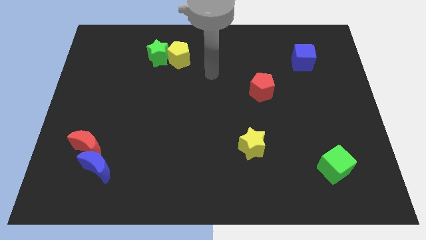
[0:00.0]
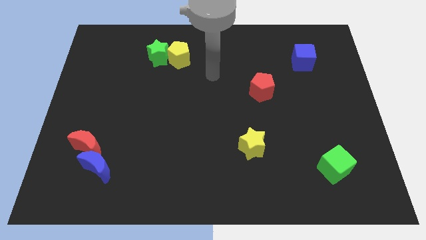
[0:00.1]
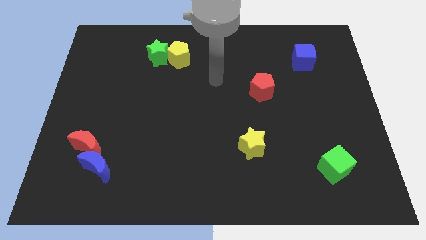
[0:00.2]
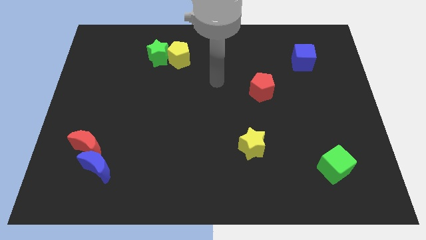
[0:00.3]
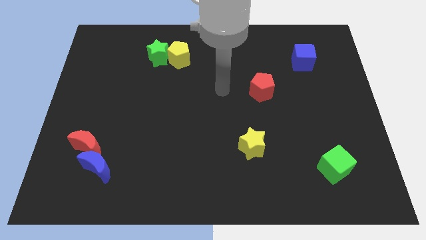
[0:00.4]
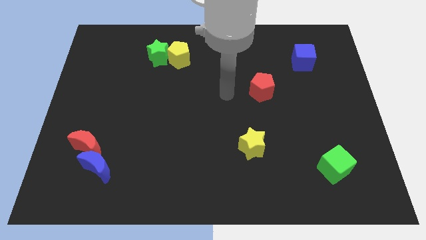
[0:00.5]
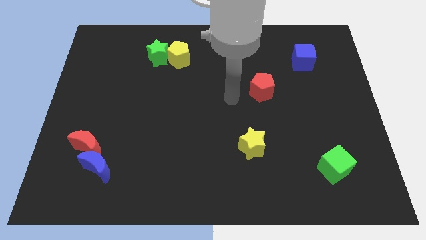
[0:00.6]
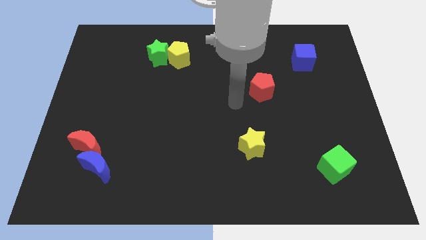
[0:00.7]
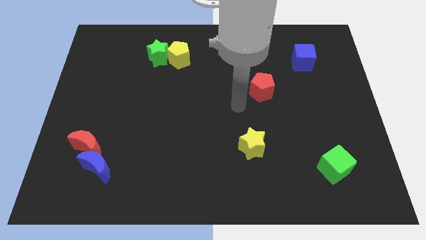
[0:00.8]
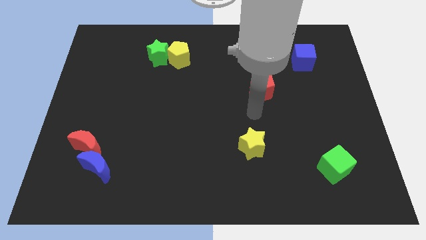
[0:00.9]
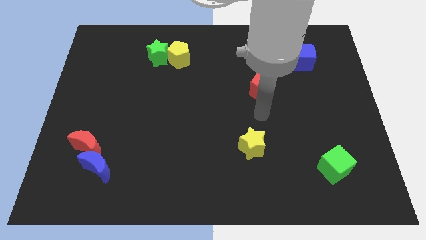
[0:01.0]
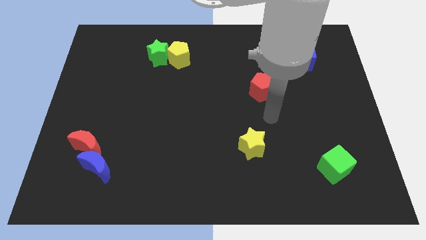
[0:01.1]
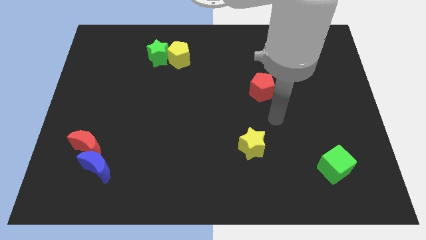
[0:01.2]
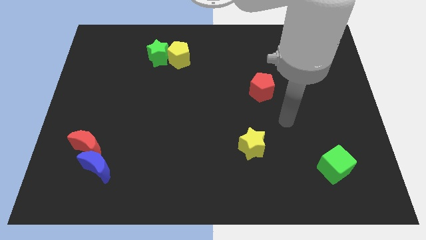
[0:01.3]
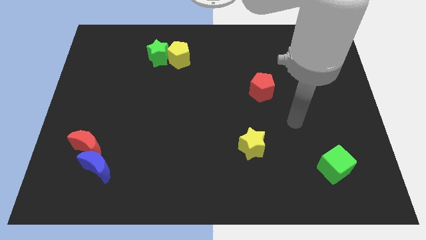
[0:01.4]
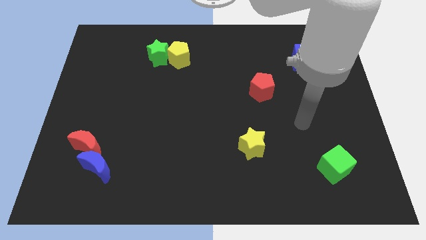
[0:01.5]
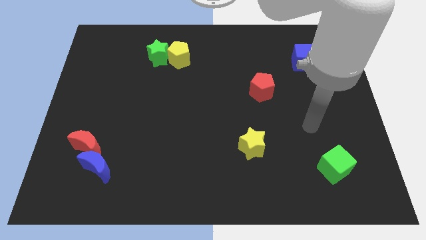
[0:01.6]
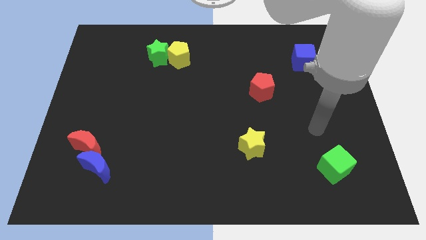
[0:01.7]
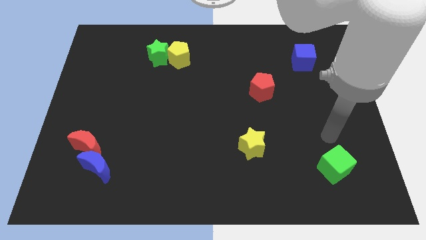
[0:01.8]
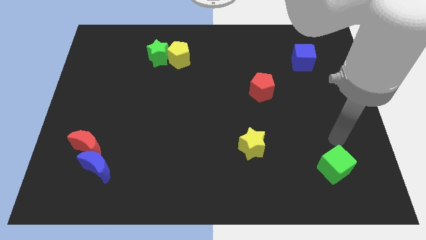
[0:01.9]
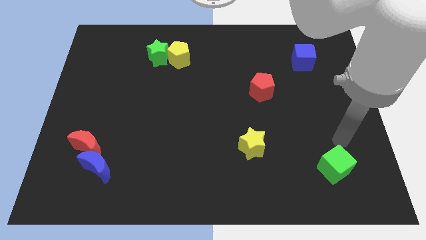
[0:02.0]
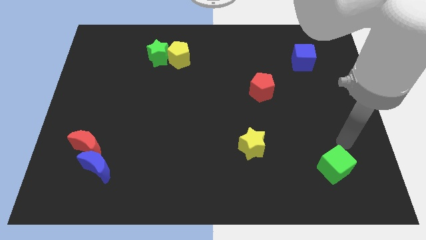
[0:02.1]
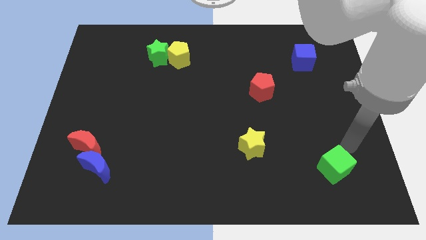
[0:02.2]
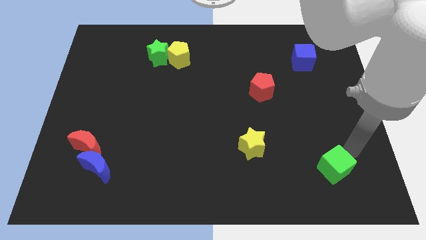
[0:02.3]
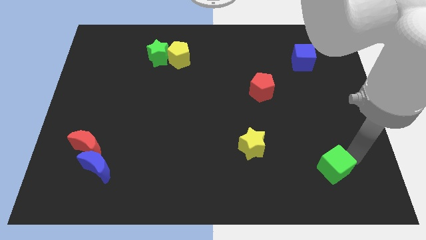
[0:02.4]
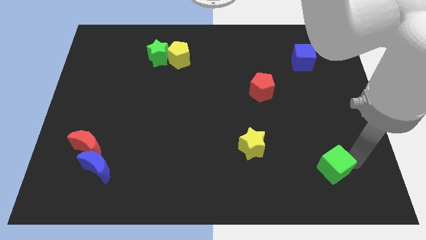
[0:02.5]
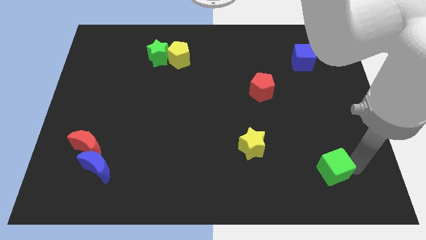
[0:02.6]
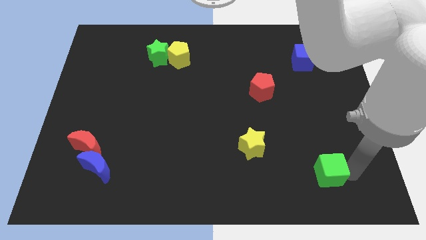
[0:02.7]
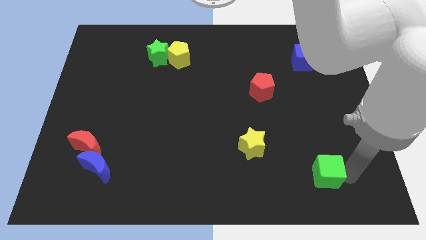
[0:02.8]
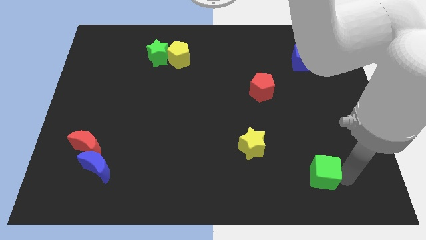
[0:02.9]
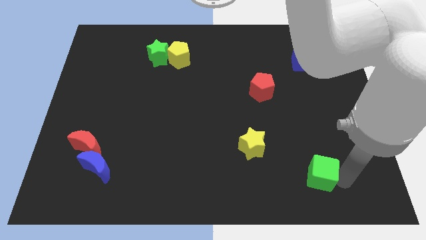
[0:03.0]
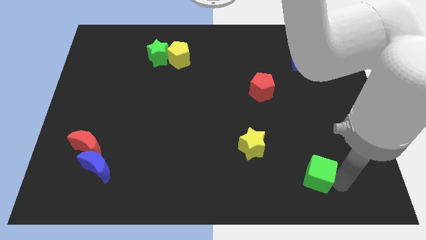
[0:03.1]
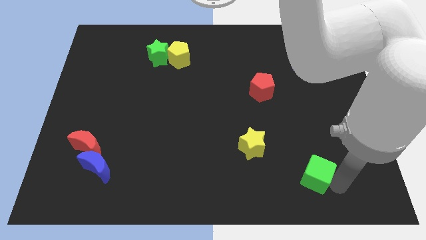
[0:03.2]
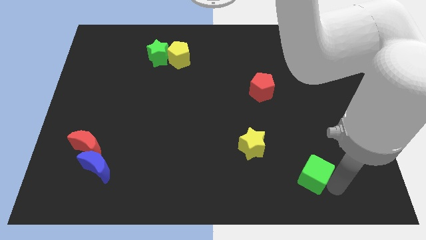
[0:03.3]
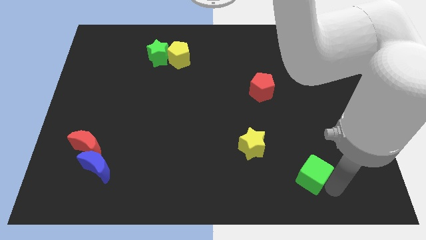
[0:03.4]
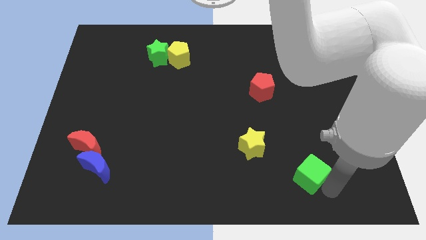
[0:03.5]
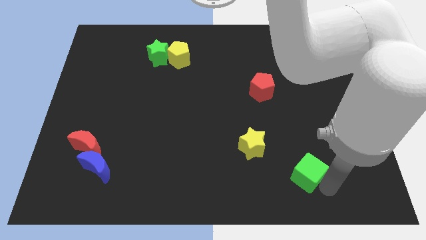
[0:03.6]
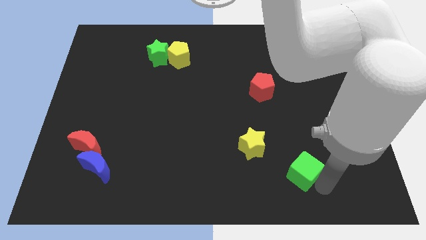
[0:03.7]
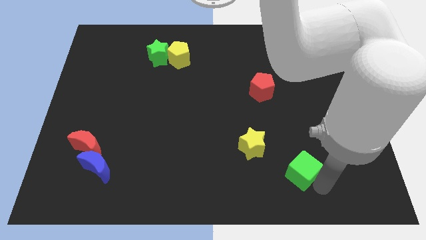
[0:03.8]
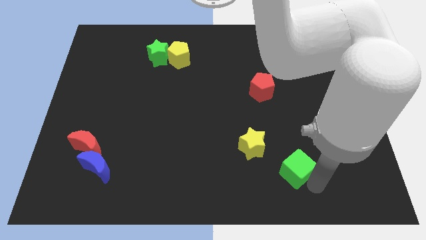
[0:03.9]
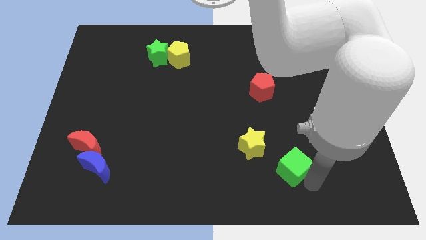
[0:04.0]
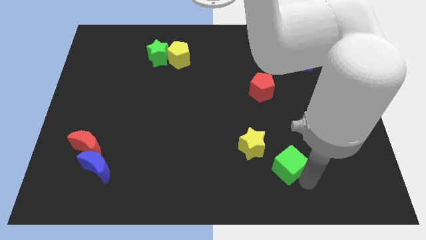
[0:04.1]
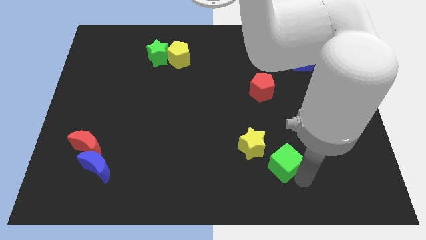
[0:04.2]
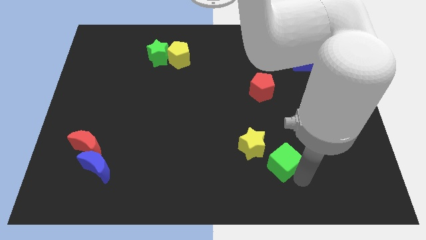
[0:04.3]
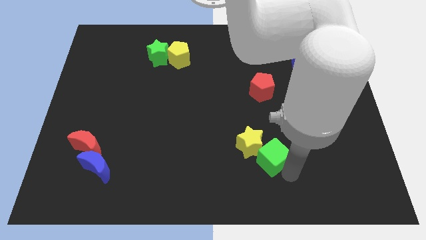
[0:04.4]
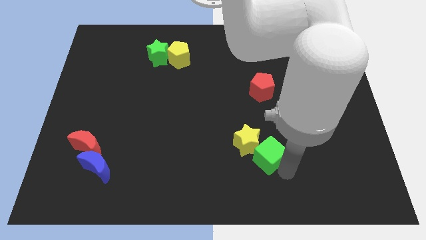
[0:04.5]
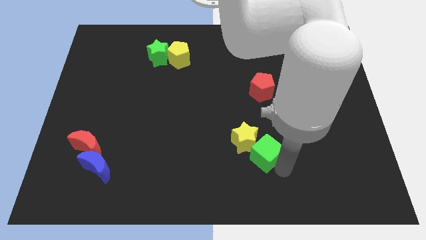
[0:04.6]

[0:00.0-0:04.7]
move the green cube close to the yellow star

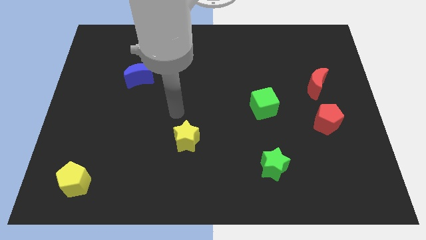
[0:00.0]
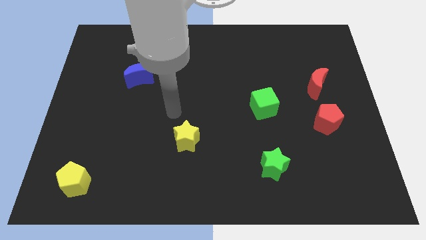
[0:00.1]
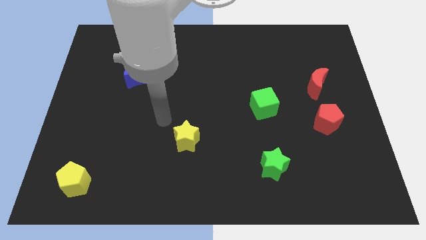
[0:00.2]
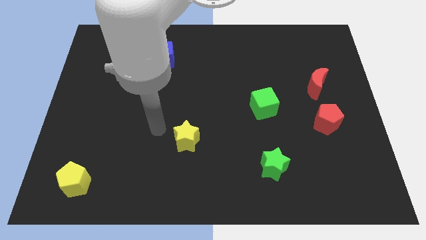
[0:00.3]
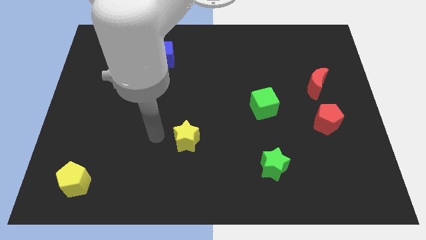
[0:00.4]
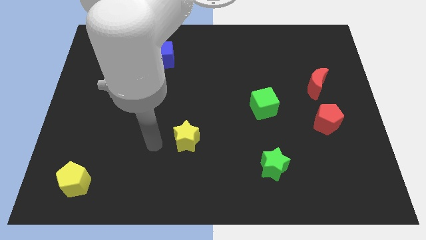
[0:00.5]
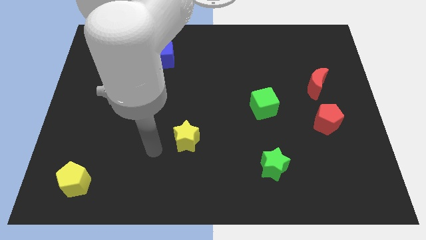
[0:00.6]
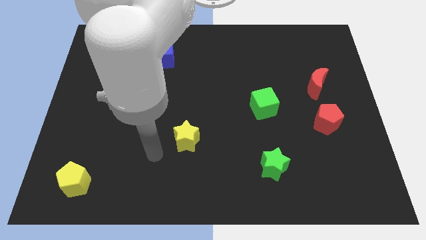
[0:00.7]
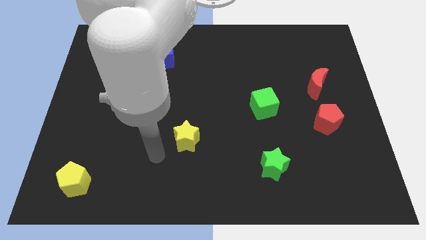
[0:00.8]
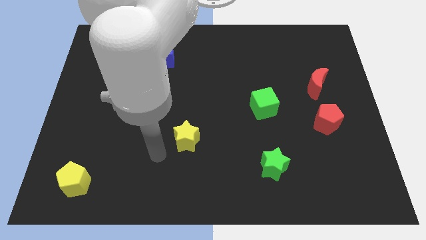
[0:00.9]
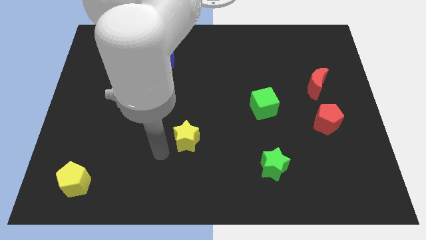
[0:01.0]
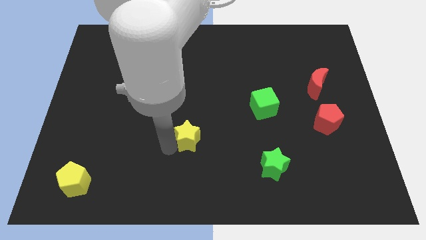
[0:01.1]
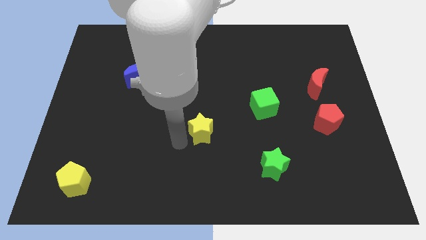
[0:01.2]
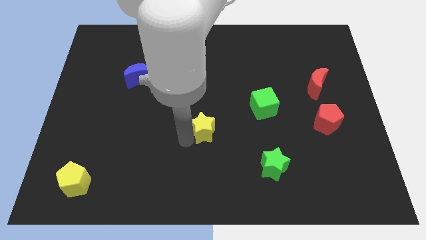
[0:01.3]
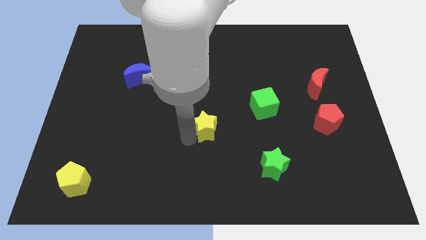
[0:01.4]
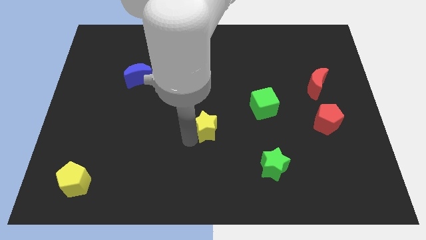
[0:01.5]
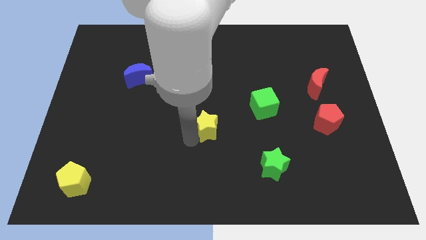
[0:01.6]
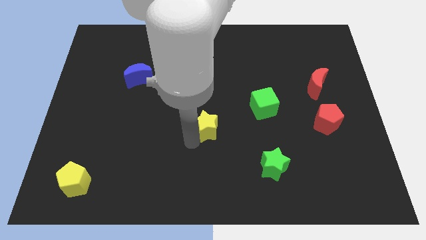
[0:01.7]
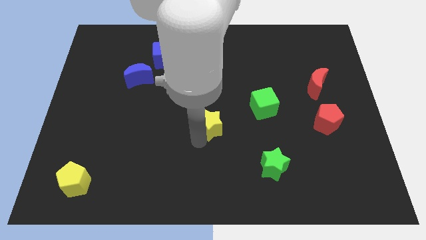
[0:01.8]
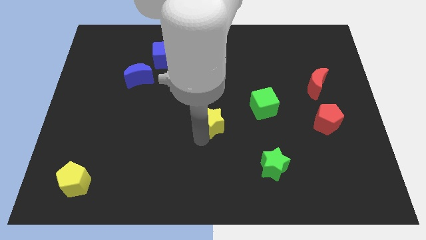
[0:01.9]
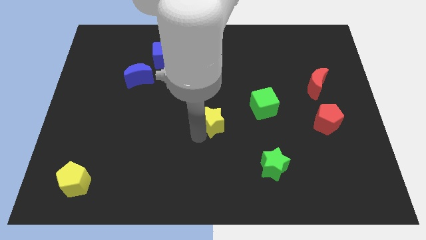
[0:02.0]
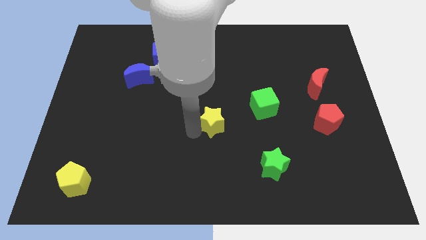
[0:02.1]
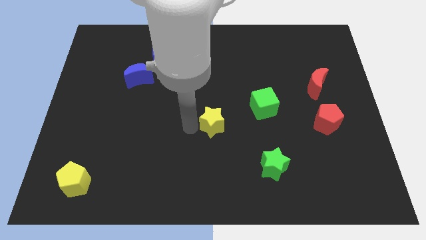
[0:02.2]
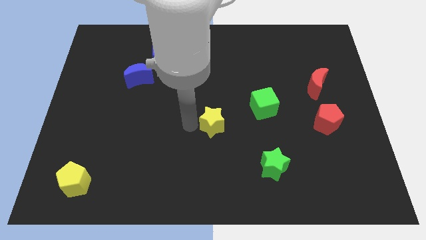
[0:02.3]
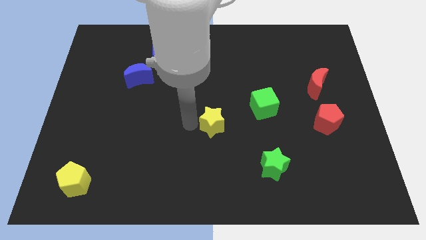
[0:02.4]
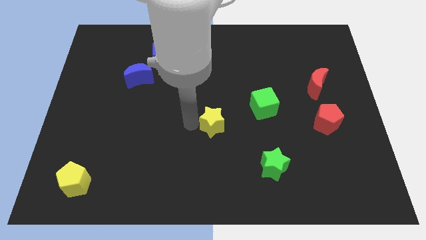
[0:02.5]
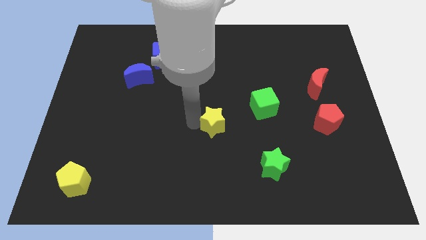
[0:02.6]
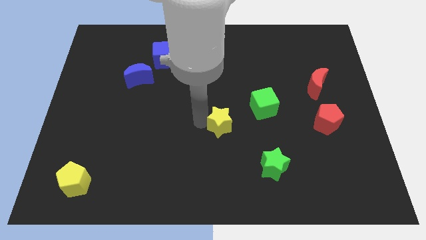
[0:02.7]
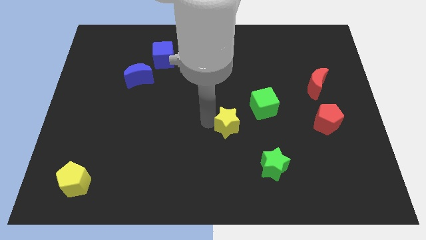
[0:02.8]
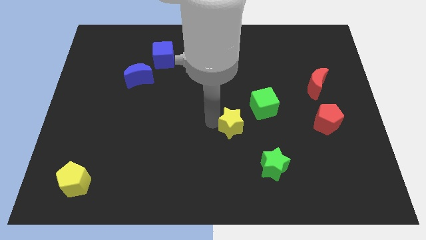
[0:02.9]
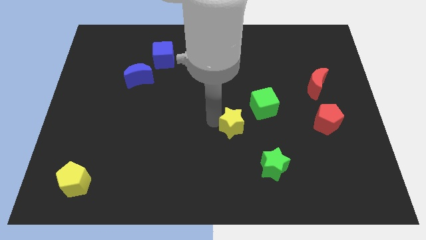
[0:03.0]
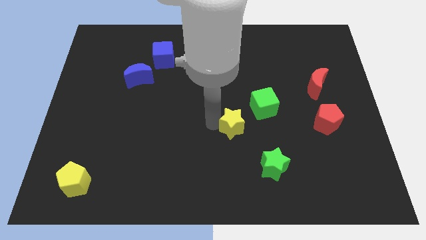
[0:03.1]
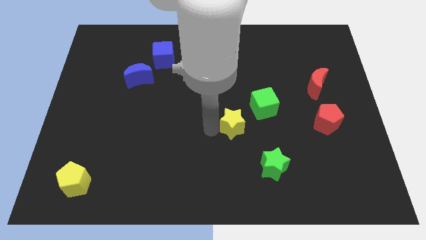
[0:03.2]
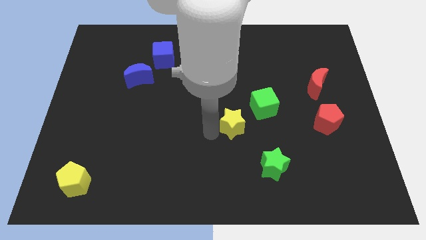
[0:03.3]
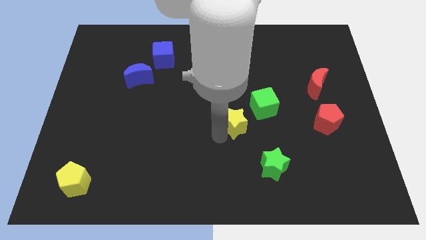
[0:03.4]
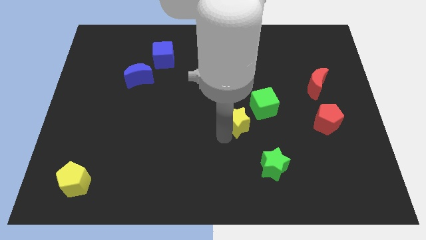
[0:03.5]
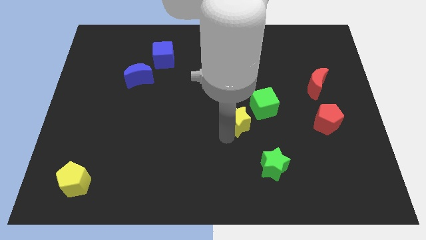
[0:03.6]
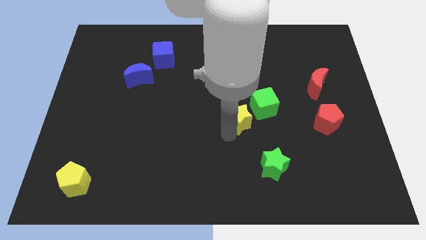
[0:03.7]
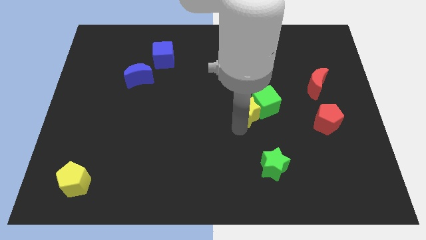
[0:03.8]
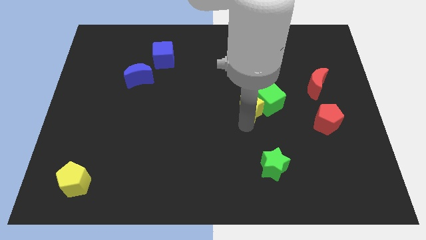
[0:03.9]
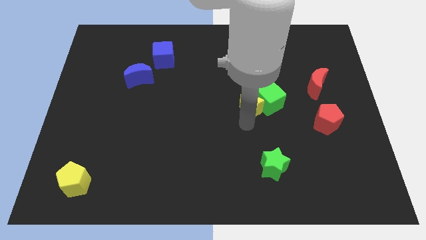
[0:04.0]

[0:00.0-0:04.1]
move the yellow star close to the green cube
